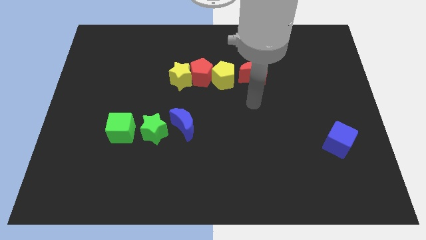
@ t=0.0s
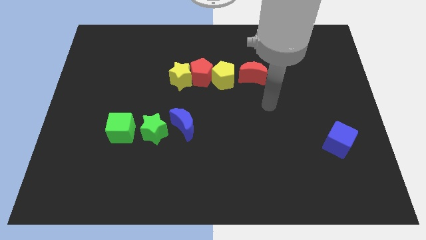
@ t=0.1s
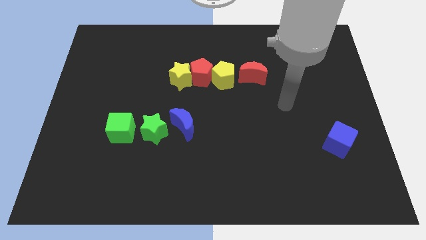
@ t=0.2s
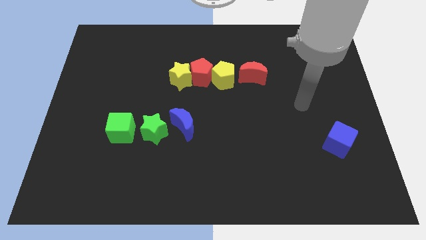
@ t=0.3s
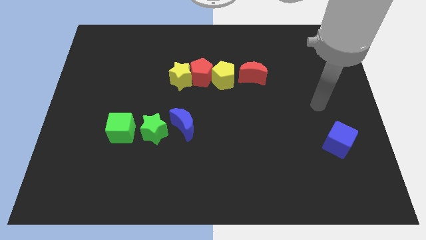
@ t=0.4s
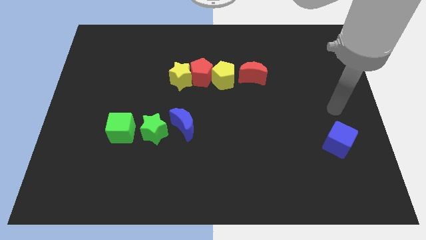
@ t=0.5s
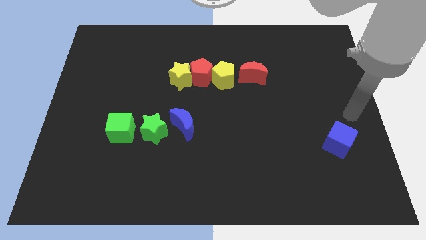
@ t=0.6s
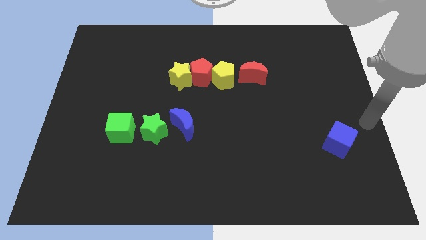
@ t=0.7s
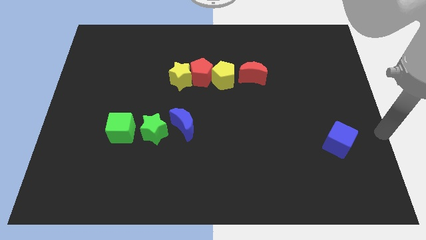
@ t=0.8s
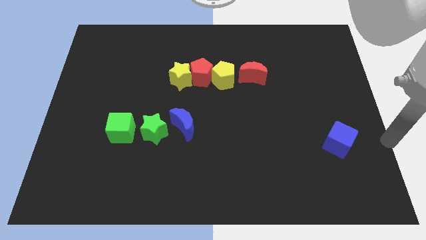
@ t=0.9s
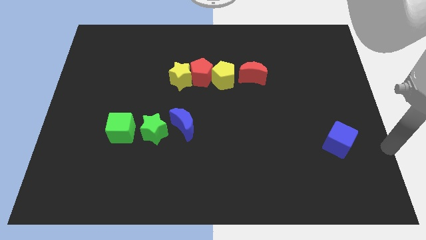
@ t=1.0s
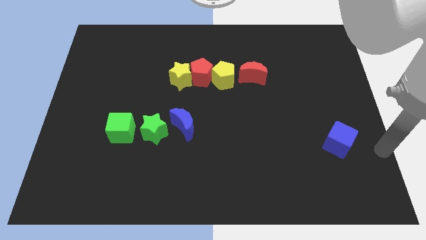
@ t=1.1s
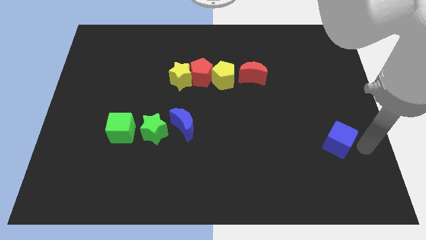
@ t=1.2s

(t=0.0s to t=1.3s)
place your arm at the right of the blue cube

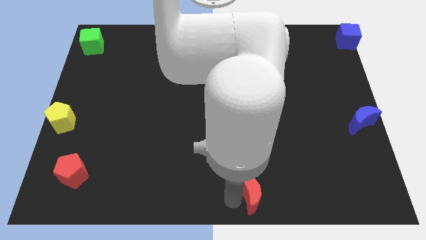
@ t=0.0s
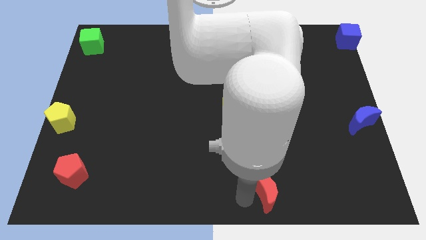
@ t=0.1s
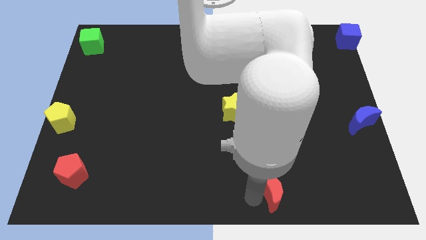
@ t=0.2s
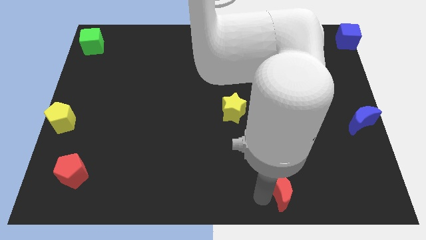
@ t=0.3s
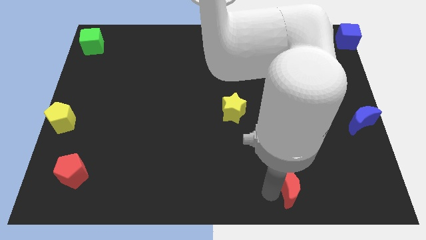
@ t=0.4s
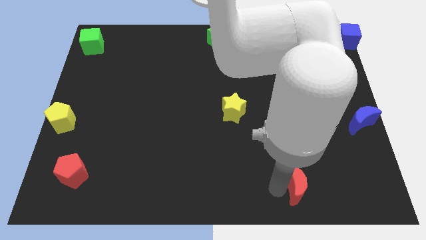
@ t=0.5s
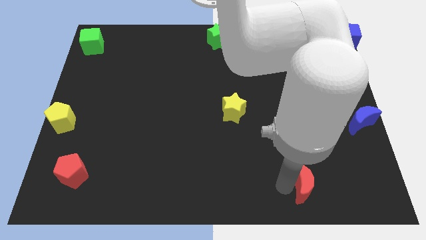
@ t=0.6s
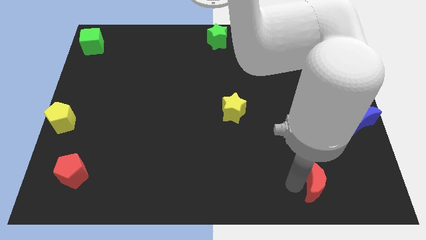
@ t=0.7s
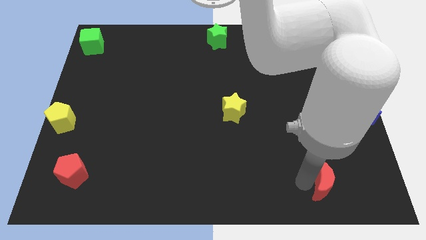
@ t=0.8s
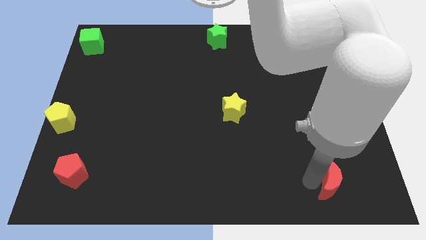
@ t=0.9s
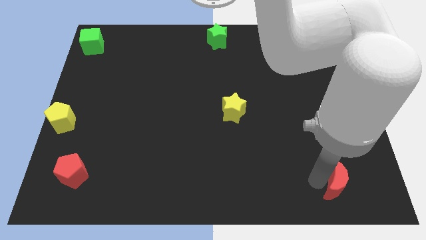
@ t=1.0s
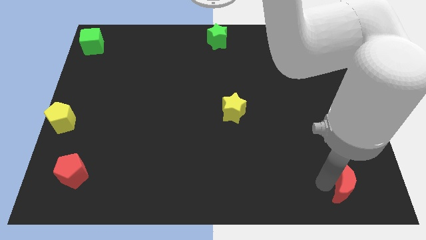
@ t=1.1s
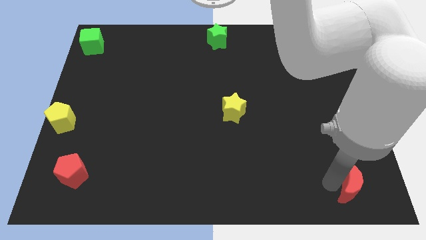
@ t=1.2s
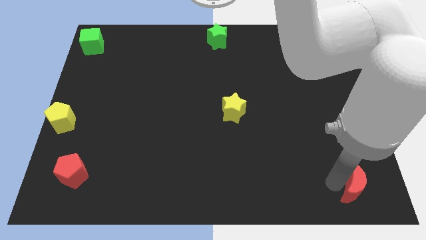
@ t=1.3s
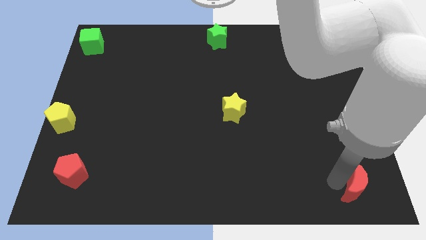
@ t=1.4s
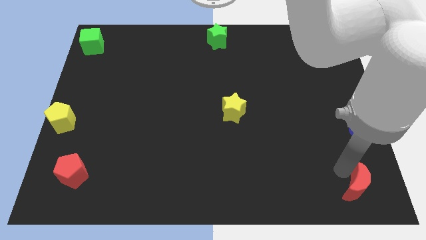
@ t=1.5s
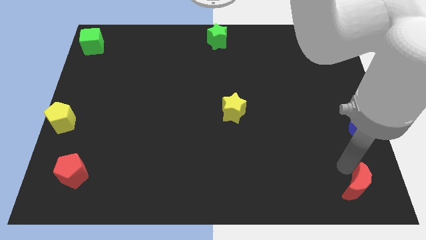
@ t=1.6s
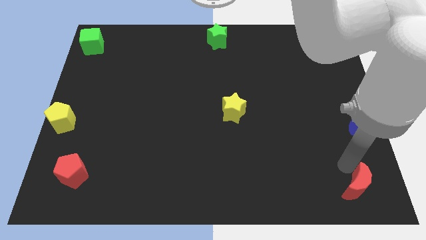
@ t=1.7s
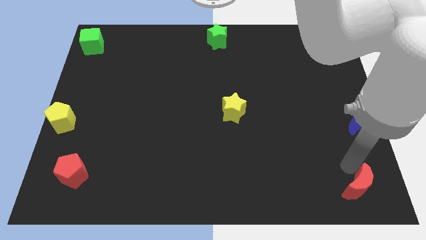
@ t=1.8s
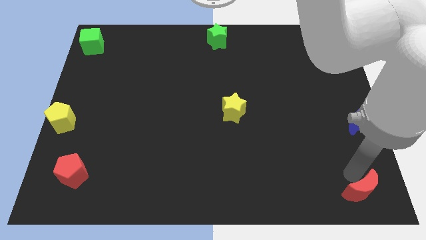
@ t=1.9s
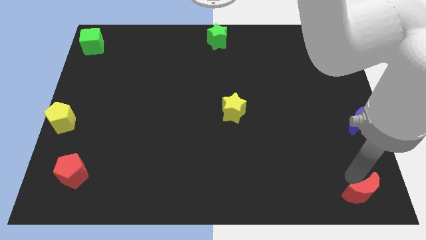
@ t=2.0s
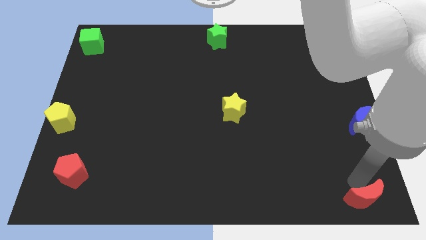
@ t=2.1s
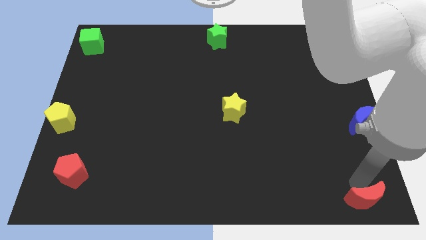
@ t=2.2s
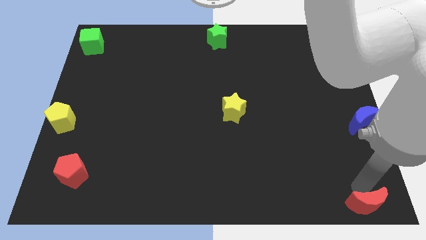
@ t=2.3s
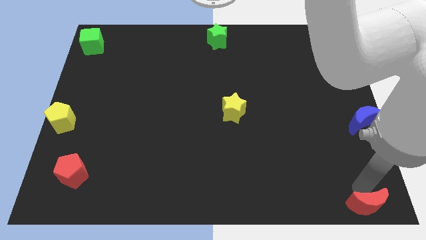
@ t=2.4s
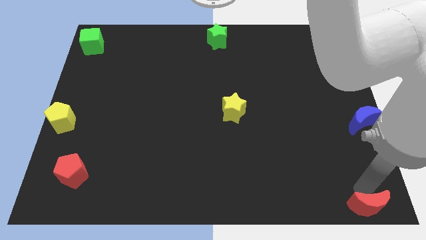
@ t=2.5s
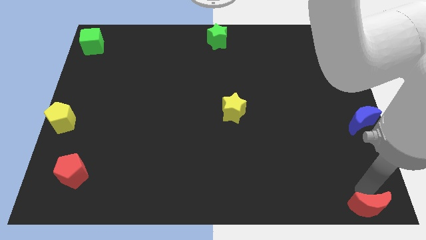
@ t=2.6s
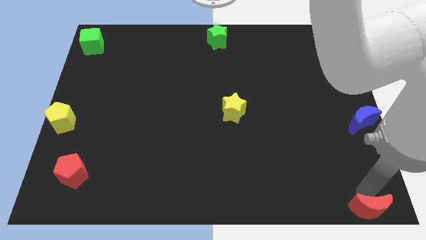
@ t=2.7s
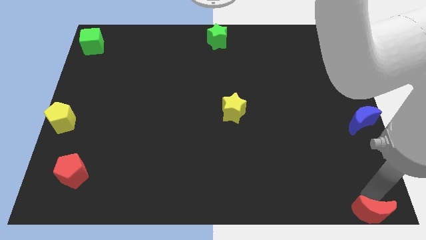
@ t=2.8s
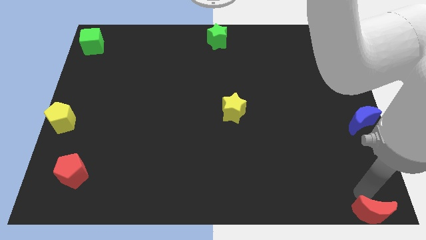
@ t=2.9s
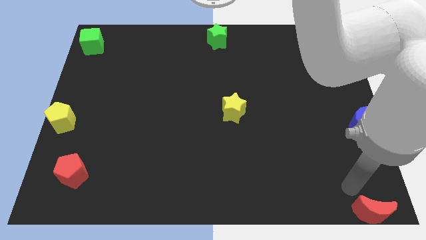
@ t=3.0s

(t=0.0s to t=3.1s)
push the red crescent to the bottom right corner of the board

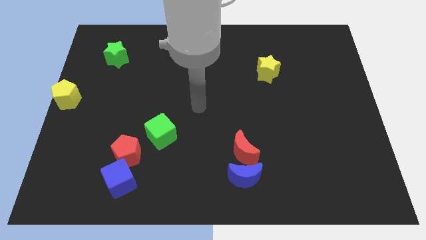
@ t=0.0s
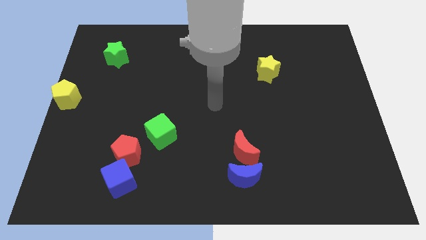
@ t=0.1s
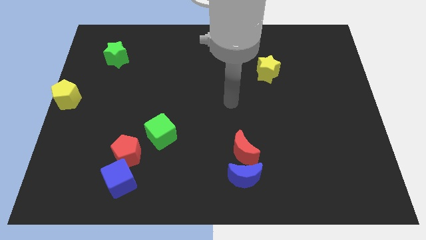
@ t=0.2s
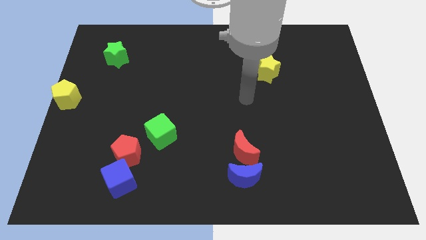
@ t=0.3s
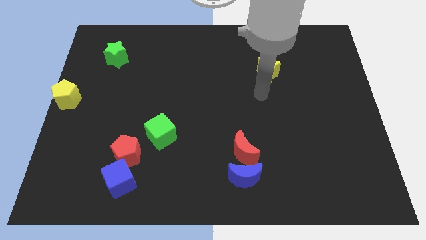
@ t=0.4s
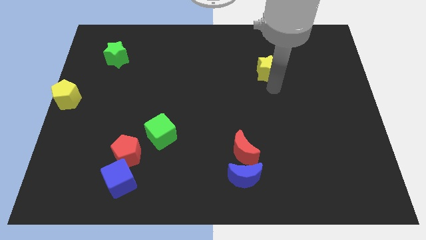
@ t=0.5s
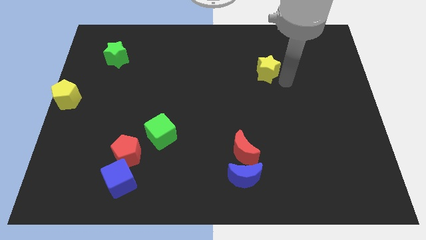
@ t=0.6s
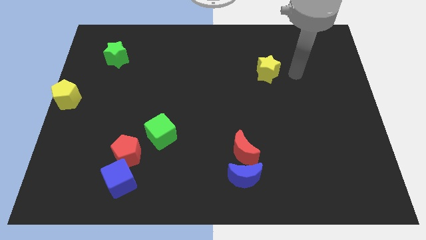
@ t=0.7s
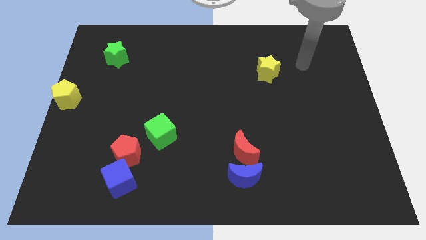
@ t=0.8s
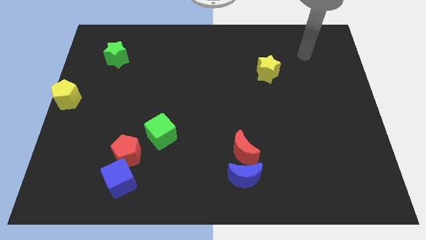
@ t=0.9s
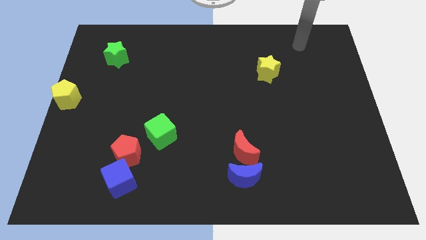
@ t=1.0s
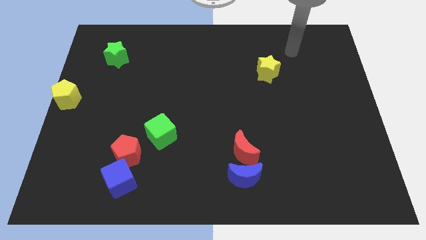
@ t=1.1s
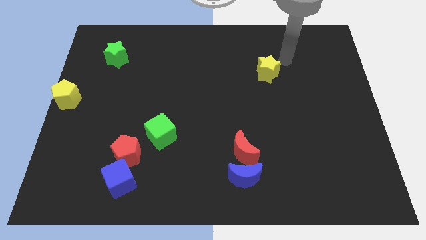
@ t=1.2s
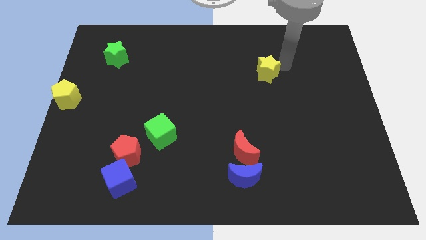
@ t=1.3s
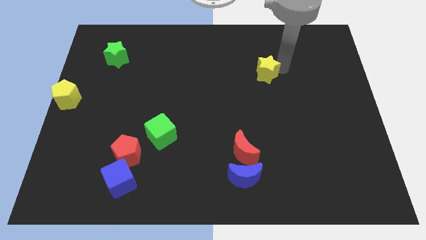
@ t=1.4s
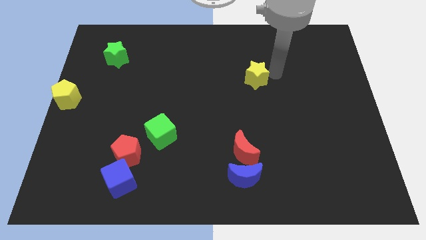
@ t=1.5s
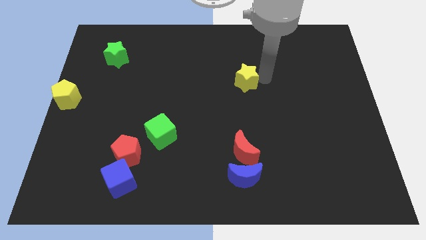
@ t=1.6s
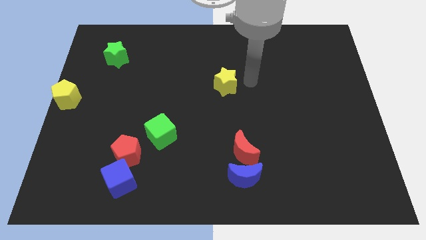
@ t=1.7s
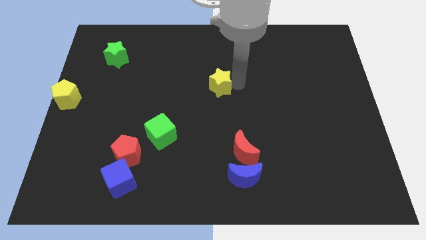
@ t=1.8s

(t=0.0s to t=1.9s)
move arm near yellow star

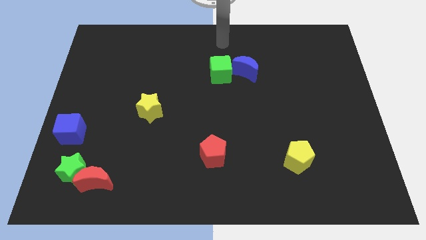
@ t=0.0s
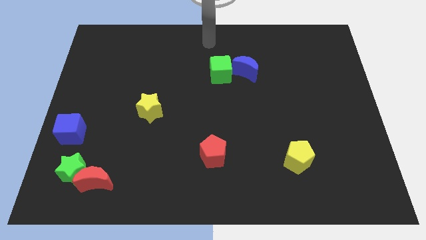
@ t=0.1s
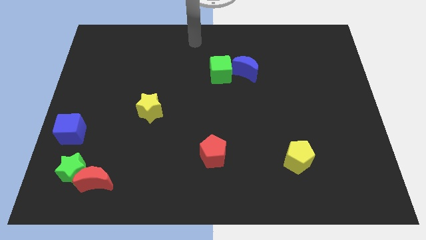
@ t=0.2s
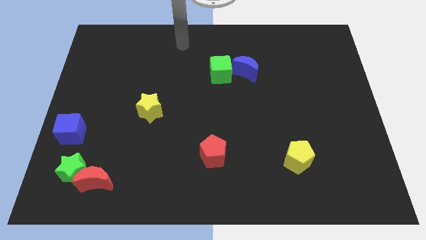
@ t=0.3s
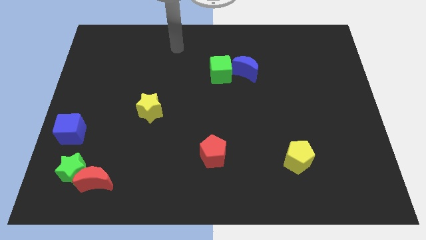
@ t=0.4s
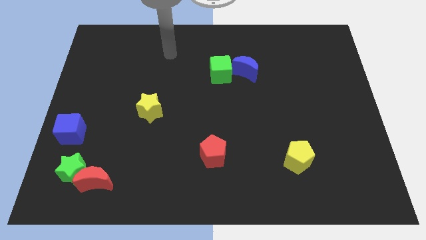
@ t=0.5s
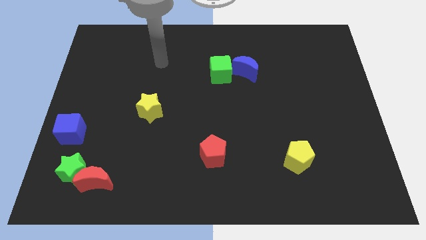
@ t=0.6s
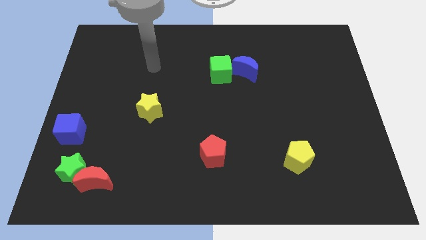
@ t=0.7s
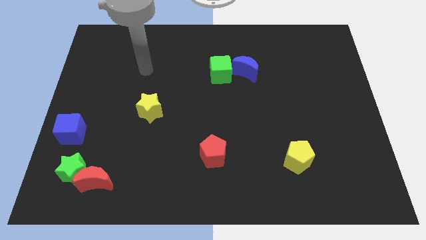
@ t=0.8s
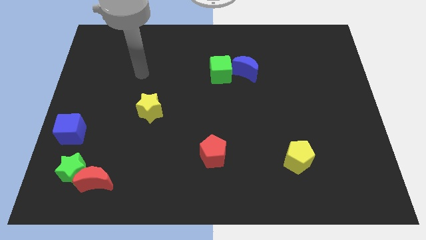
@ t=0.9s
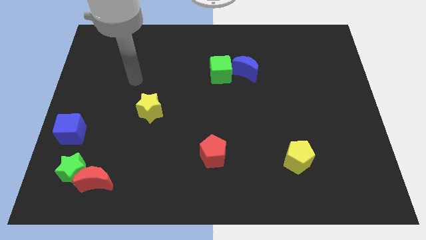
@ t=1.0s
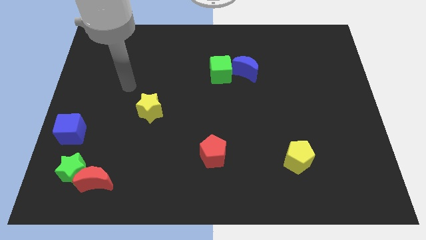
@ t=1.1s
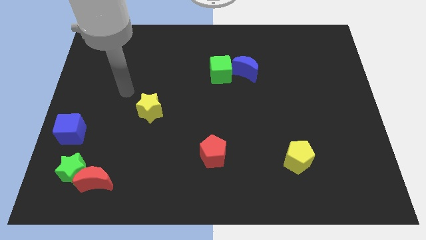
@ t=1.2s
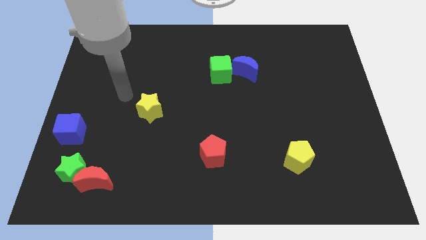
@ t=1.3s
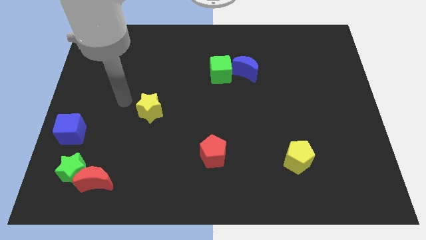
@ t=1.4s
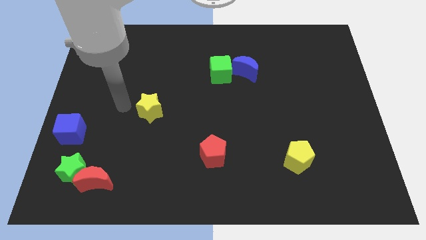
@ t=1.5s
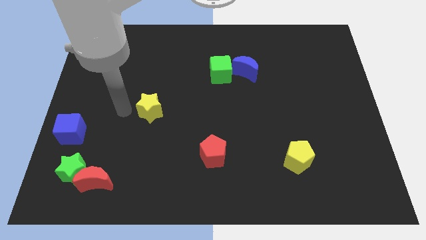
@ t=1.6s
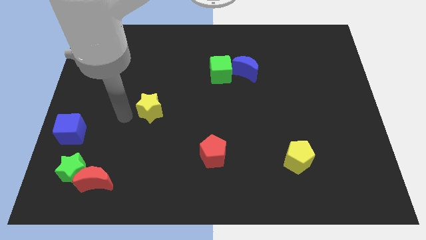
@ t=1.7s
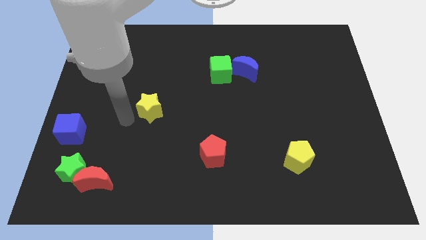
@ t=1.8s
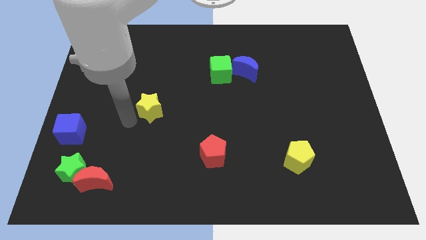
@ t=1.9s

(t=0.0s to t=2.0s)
push your arm at the left side of the yellow star

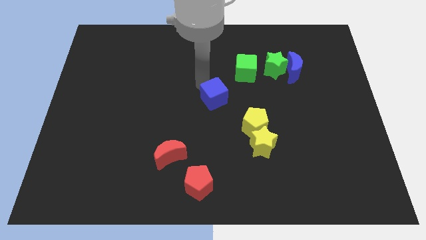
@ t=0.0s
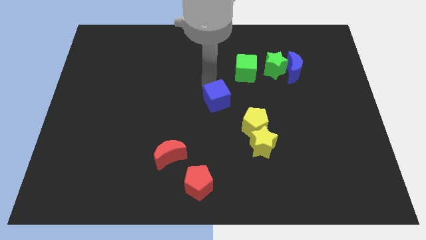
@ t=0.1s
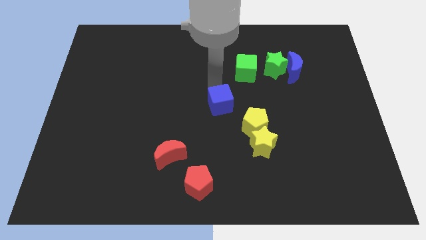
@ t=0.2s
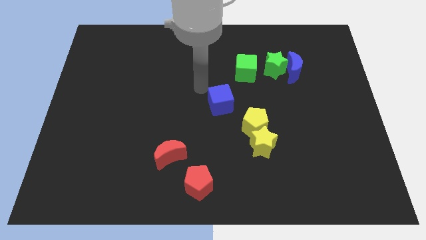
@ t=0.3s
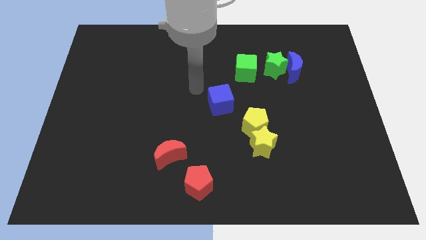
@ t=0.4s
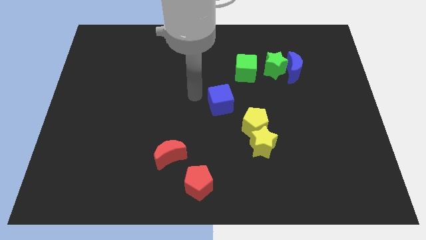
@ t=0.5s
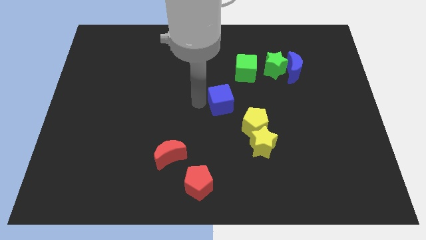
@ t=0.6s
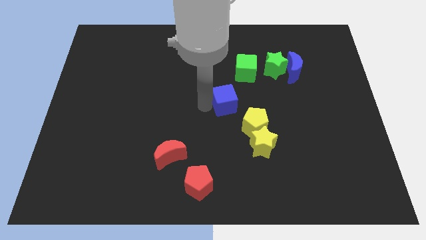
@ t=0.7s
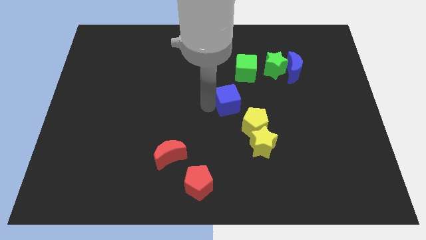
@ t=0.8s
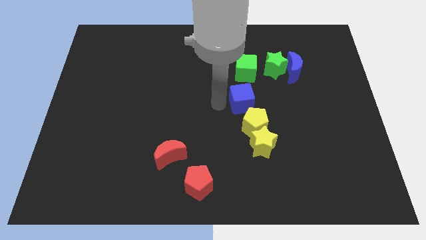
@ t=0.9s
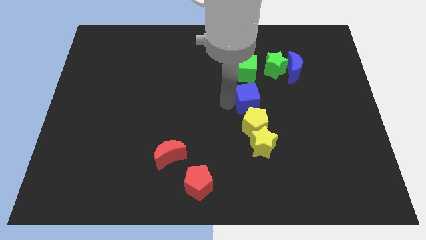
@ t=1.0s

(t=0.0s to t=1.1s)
place blue cube in between green cube and yellow pentagon
